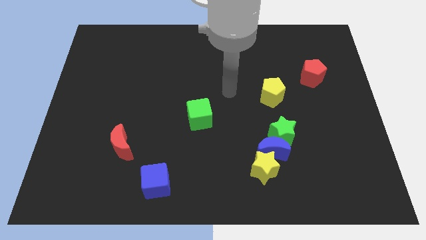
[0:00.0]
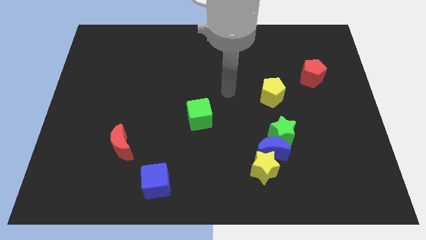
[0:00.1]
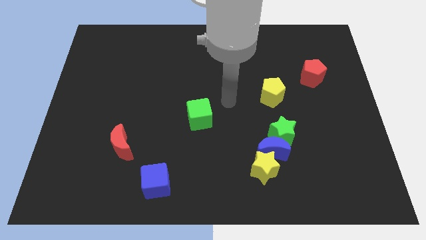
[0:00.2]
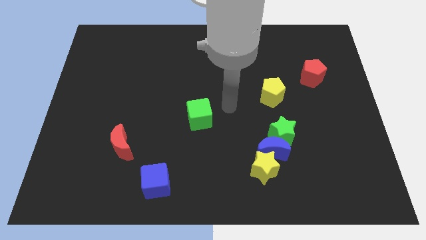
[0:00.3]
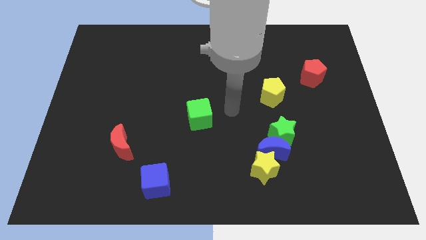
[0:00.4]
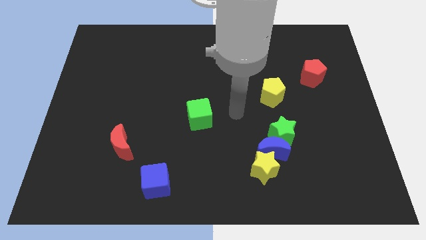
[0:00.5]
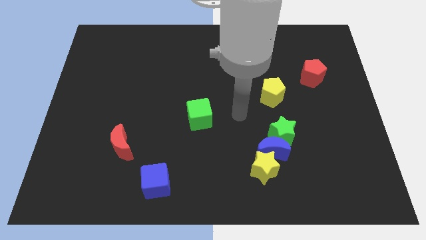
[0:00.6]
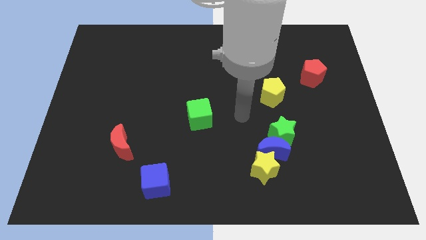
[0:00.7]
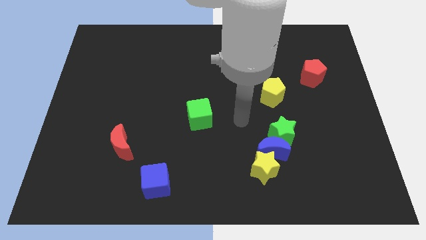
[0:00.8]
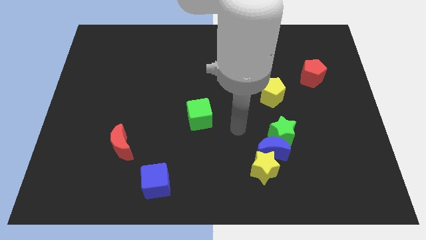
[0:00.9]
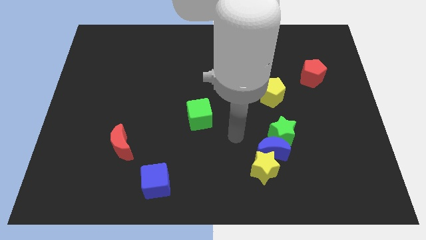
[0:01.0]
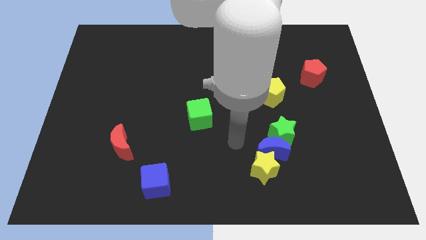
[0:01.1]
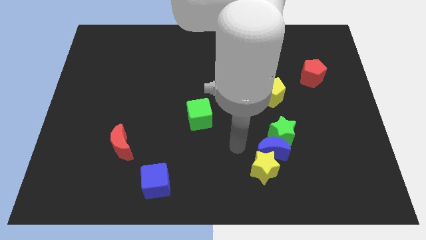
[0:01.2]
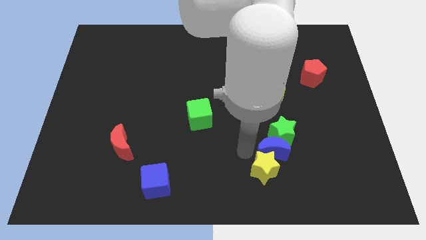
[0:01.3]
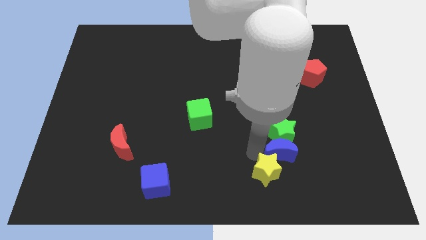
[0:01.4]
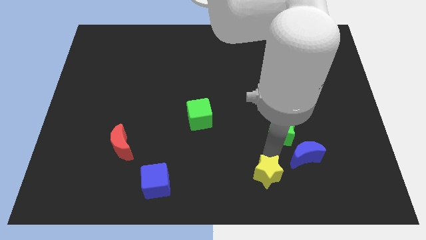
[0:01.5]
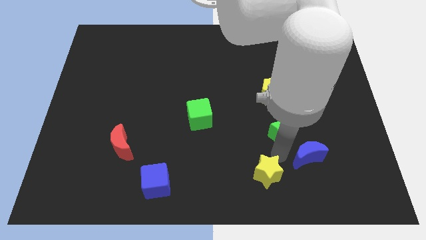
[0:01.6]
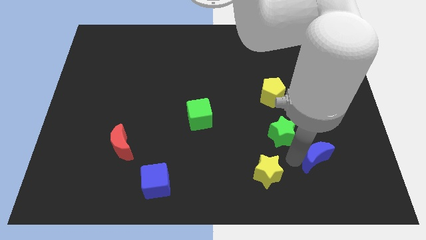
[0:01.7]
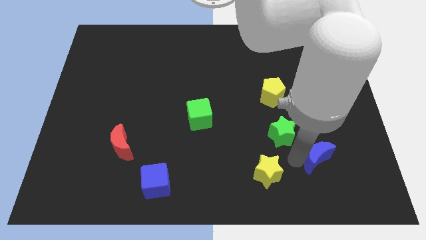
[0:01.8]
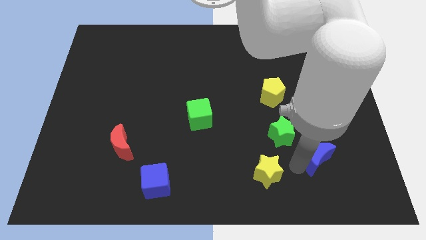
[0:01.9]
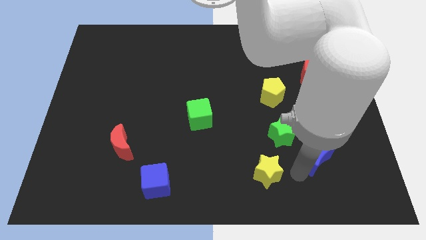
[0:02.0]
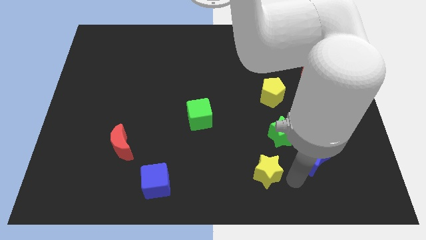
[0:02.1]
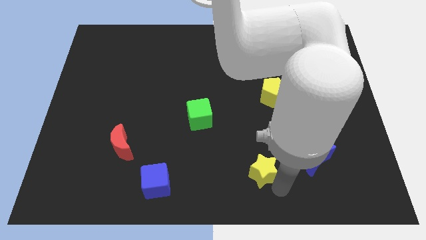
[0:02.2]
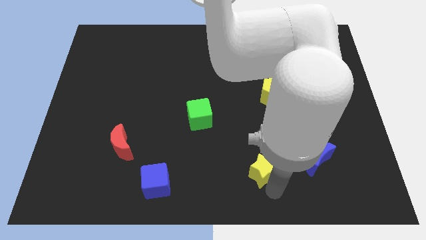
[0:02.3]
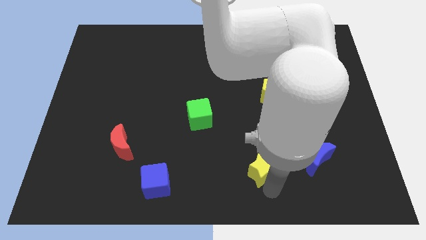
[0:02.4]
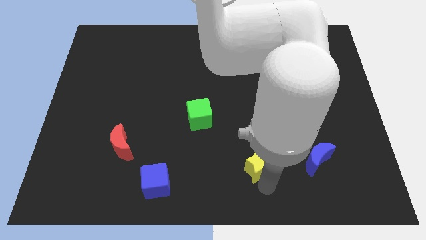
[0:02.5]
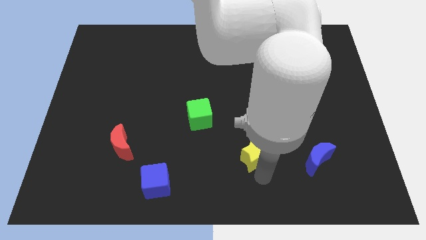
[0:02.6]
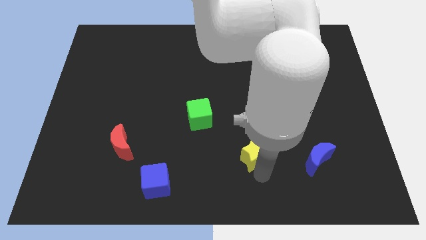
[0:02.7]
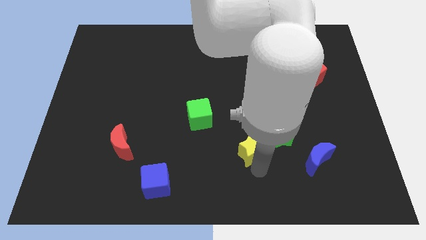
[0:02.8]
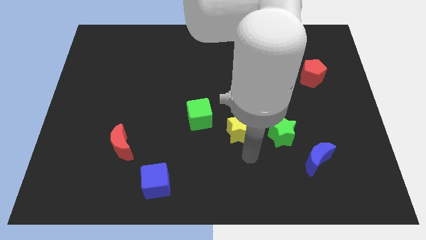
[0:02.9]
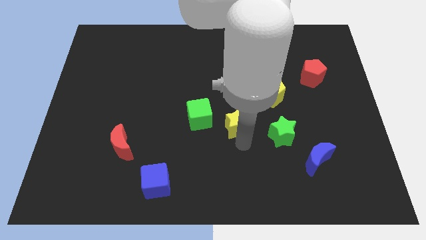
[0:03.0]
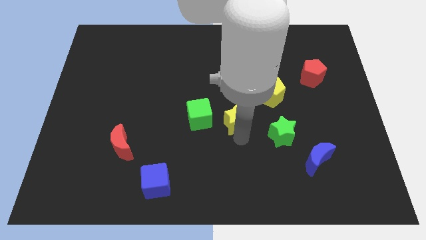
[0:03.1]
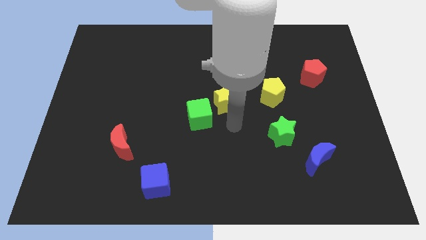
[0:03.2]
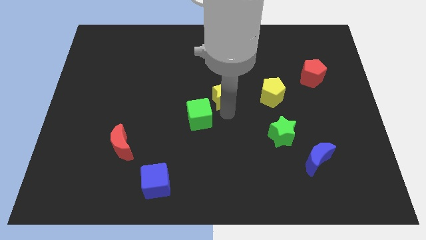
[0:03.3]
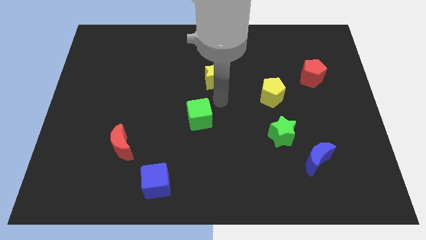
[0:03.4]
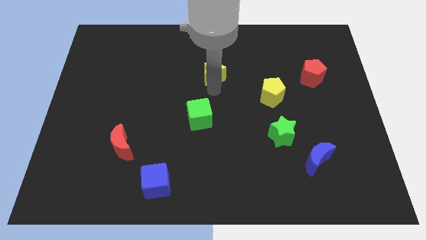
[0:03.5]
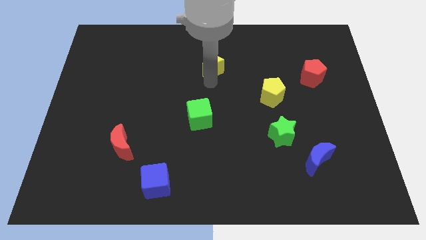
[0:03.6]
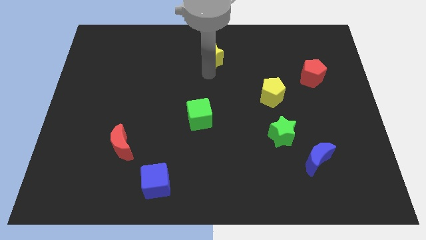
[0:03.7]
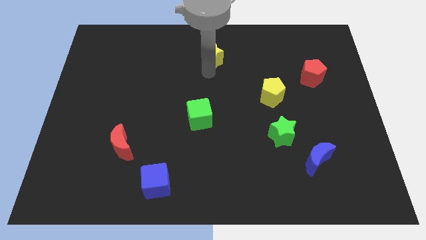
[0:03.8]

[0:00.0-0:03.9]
take the yellow star to the top center

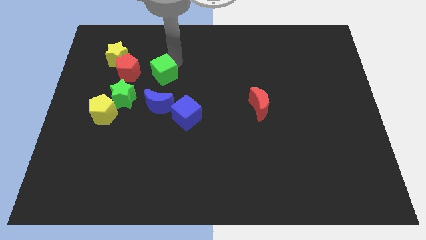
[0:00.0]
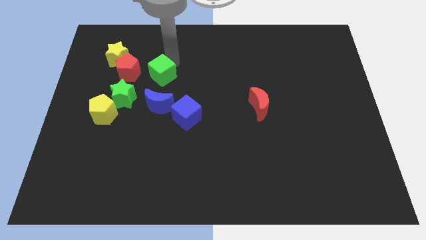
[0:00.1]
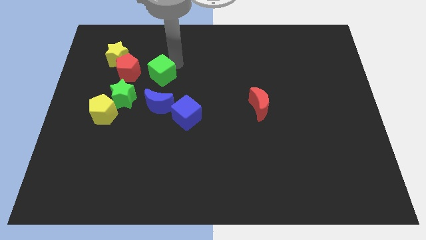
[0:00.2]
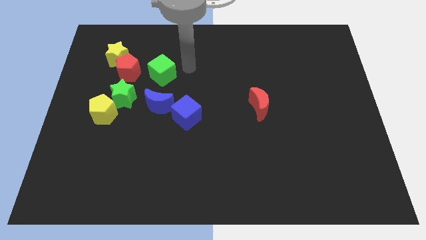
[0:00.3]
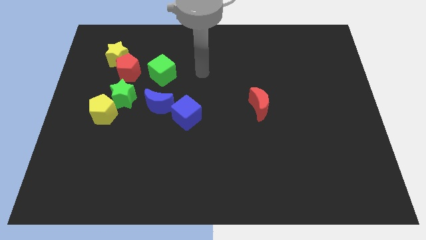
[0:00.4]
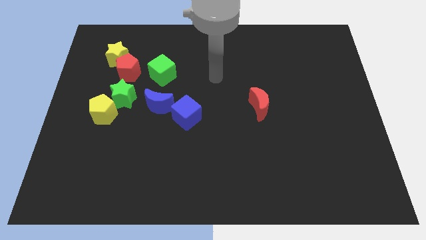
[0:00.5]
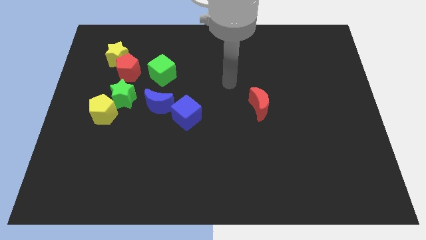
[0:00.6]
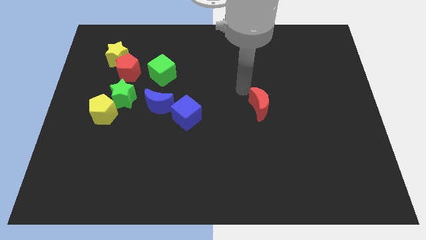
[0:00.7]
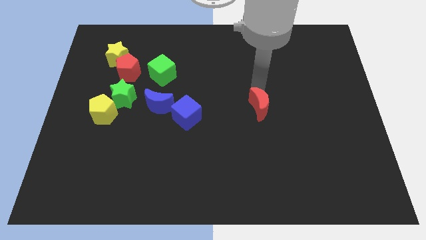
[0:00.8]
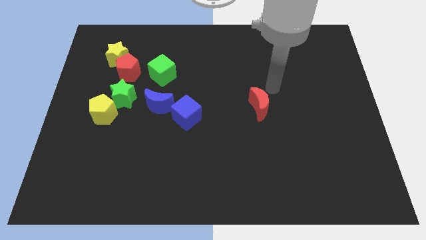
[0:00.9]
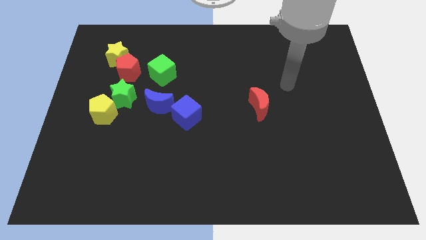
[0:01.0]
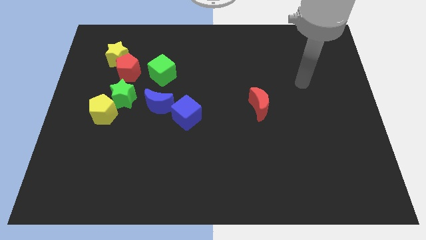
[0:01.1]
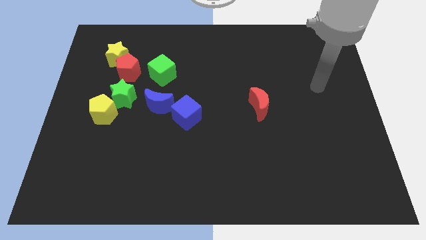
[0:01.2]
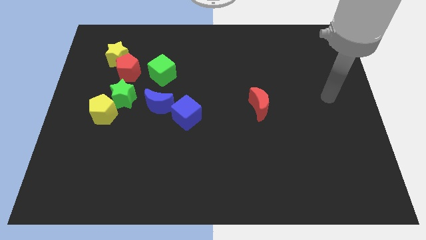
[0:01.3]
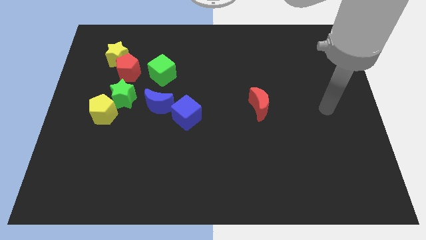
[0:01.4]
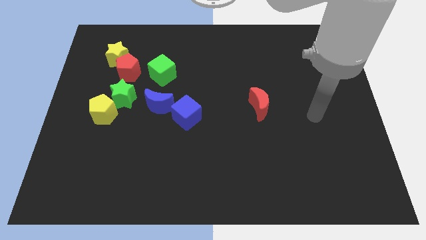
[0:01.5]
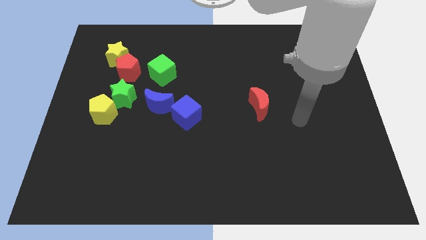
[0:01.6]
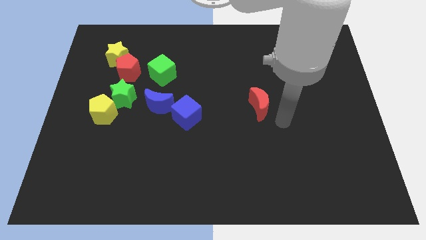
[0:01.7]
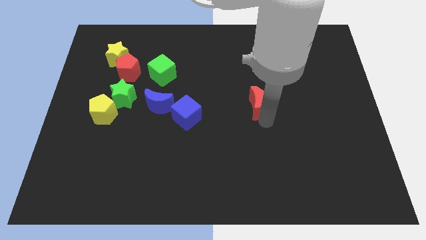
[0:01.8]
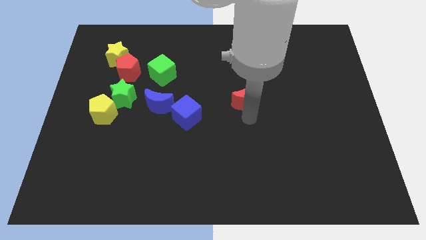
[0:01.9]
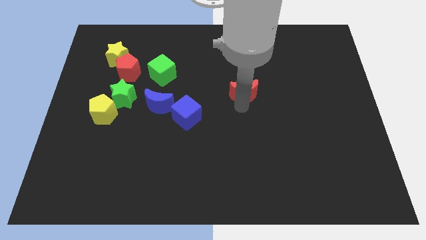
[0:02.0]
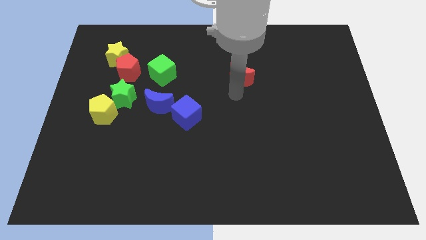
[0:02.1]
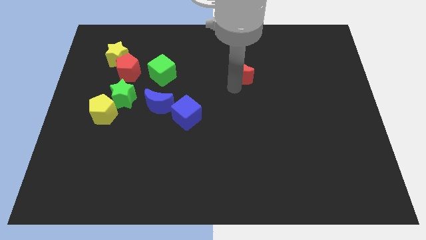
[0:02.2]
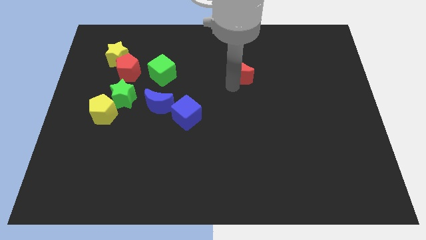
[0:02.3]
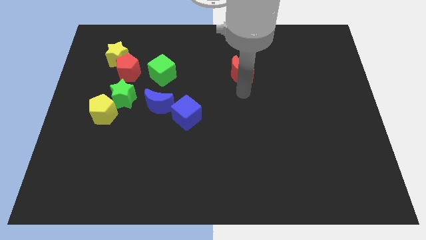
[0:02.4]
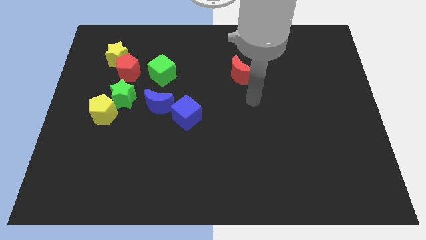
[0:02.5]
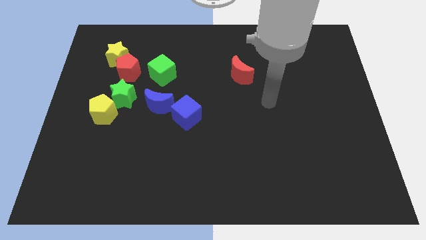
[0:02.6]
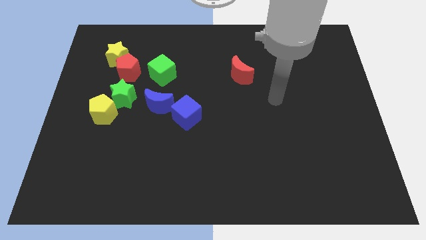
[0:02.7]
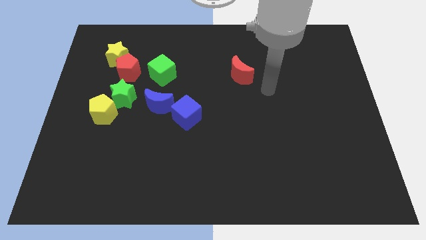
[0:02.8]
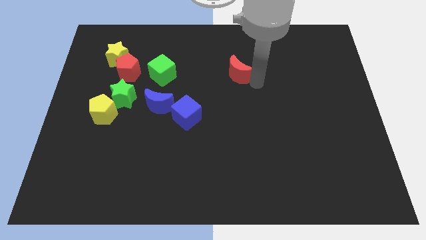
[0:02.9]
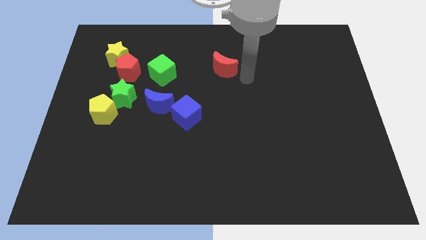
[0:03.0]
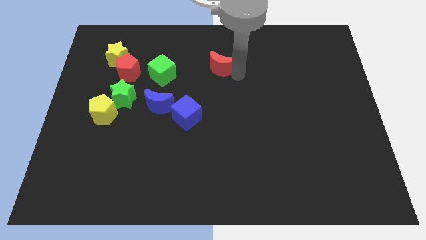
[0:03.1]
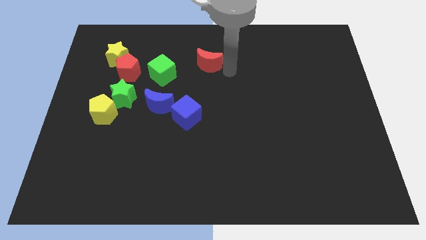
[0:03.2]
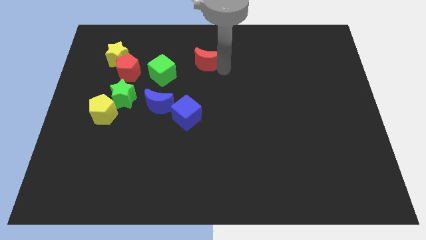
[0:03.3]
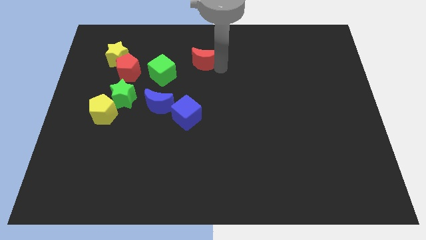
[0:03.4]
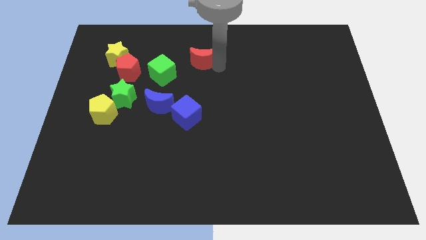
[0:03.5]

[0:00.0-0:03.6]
move the red moon towards the center

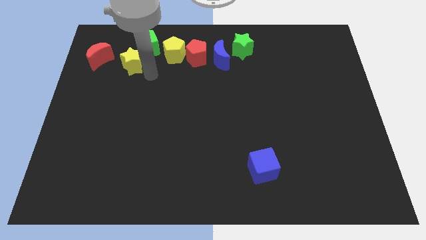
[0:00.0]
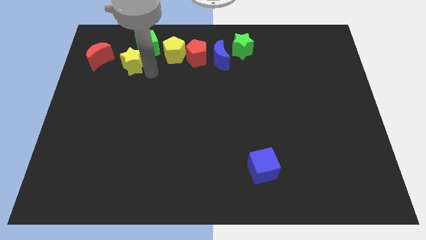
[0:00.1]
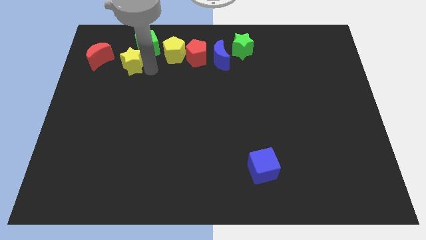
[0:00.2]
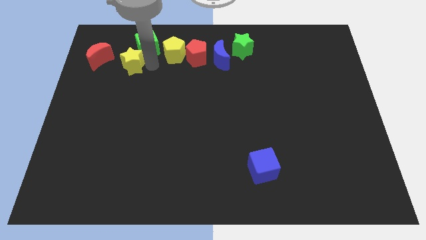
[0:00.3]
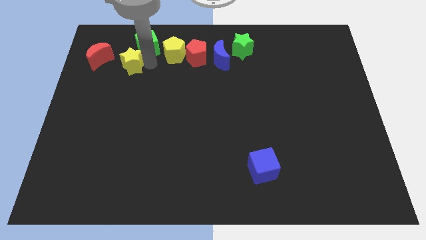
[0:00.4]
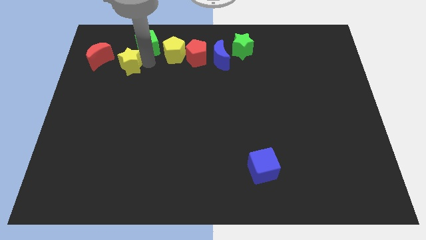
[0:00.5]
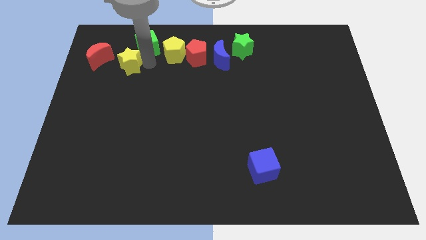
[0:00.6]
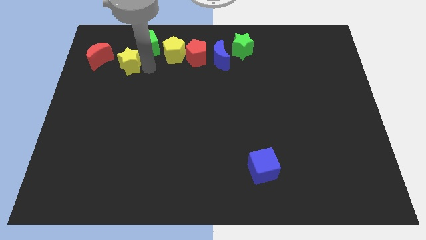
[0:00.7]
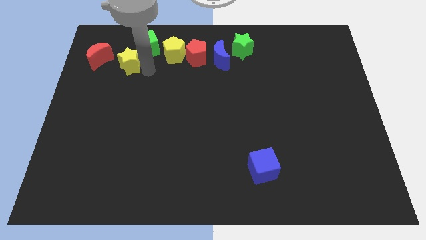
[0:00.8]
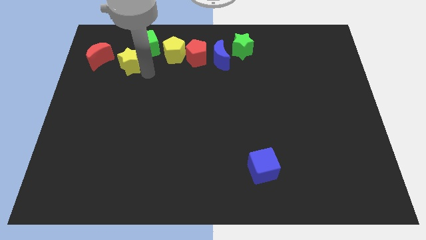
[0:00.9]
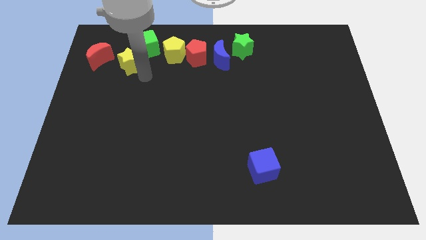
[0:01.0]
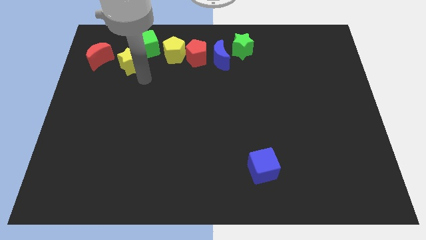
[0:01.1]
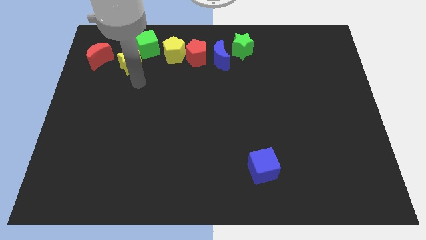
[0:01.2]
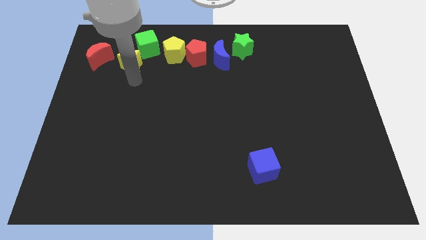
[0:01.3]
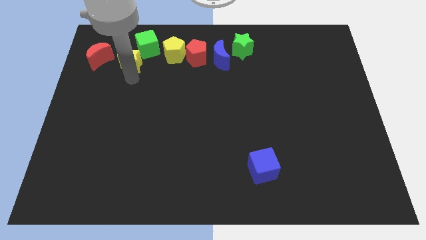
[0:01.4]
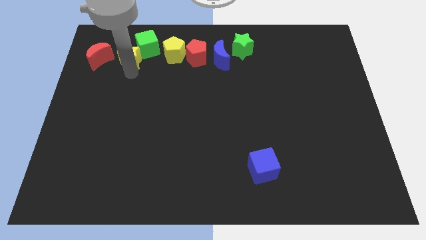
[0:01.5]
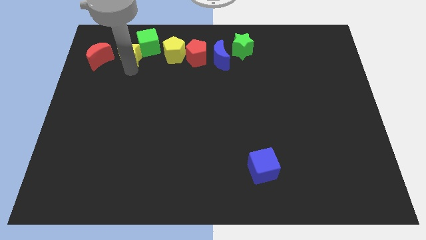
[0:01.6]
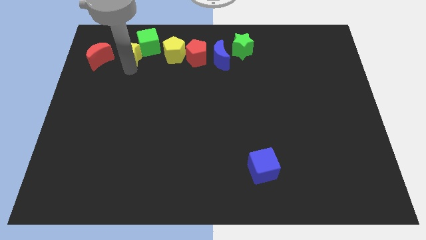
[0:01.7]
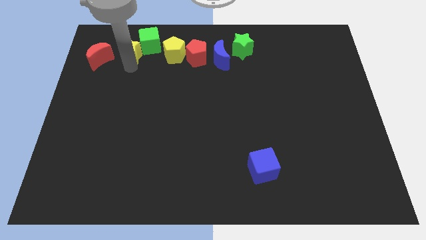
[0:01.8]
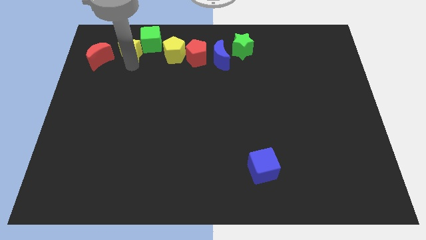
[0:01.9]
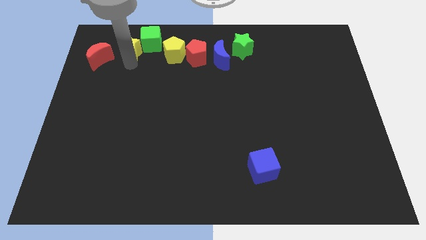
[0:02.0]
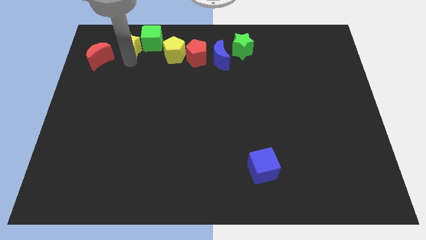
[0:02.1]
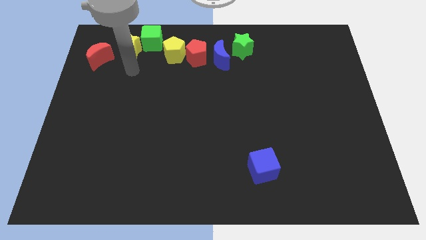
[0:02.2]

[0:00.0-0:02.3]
push the yellow star into the green cube
